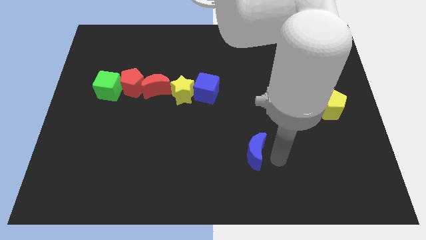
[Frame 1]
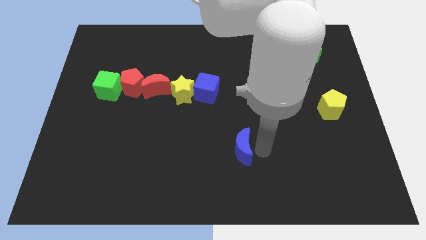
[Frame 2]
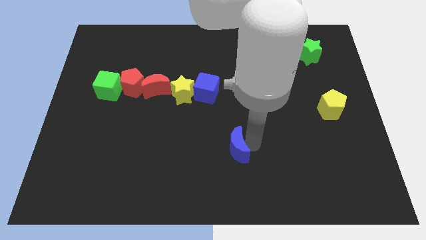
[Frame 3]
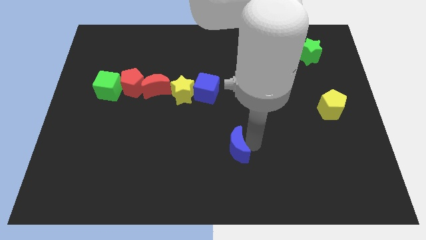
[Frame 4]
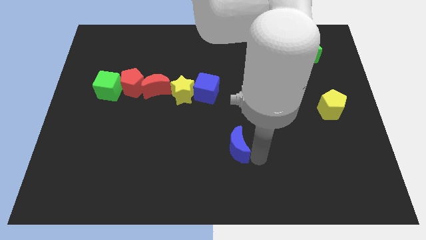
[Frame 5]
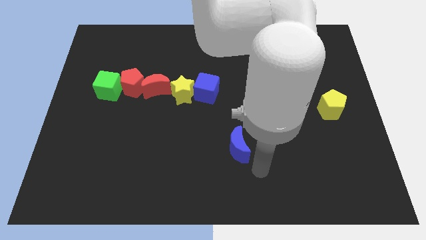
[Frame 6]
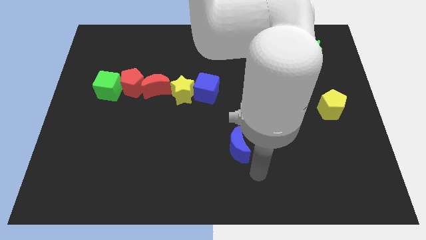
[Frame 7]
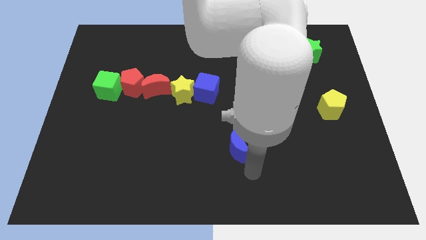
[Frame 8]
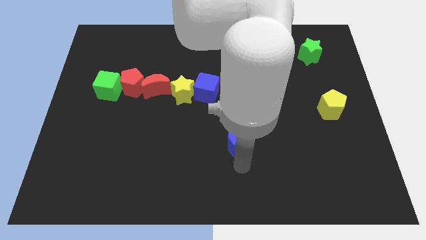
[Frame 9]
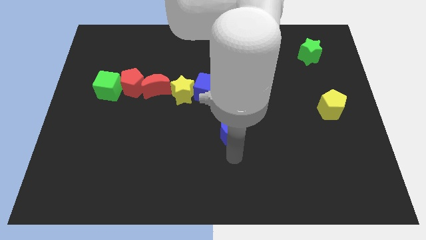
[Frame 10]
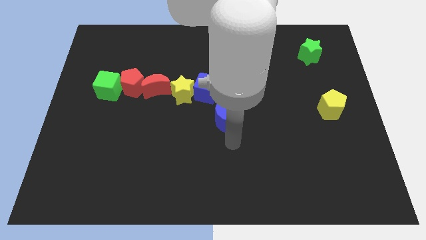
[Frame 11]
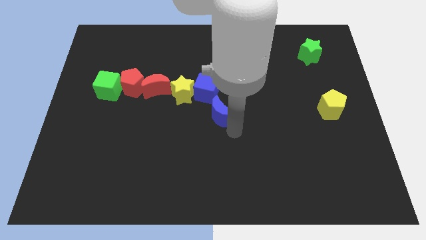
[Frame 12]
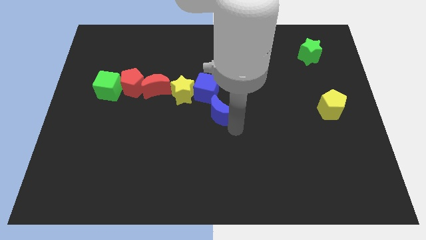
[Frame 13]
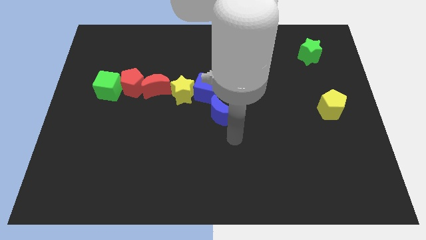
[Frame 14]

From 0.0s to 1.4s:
place the blue moon bottom right to the blue cube

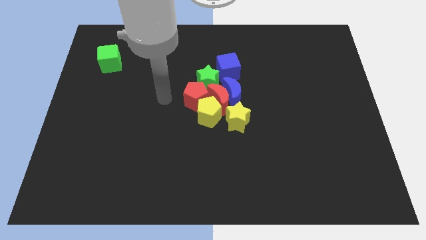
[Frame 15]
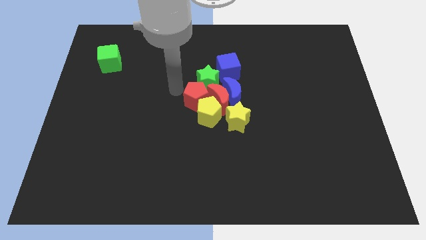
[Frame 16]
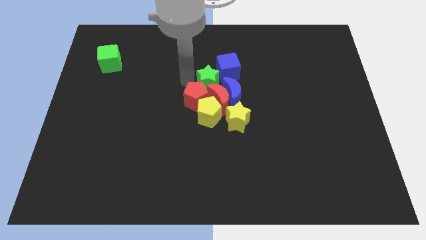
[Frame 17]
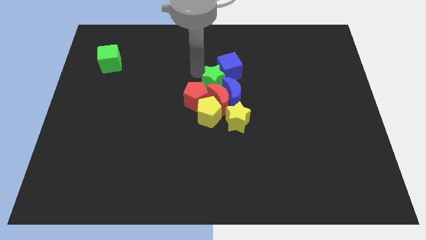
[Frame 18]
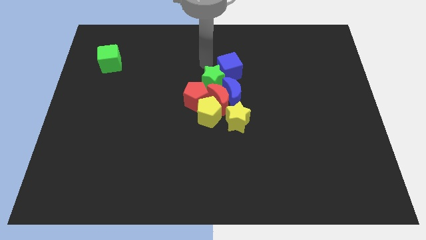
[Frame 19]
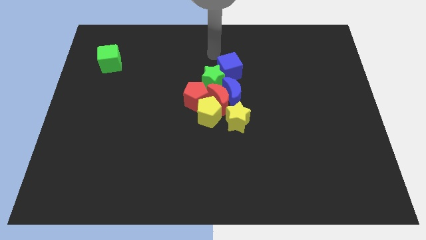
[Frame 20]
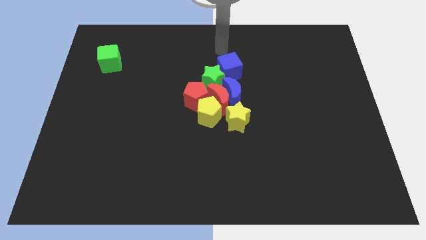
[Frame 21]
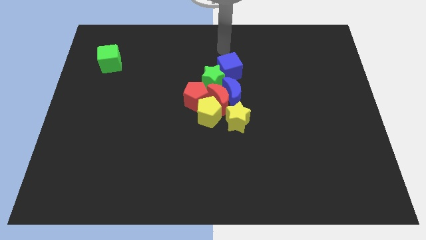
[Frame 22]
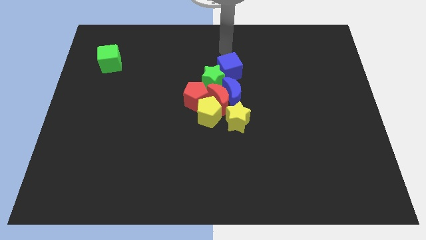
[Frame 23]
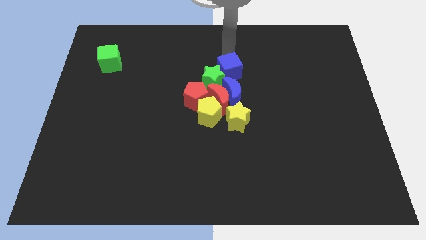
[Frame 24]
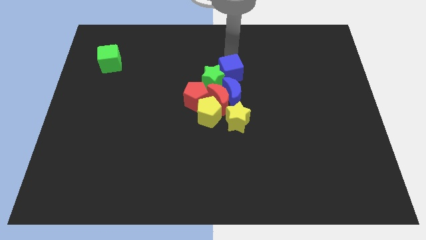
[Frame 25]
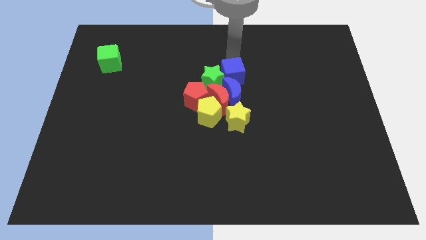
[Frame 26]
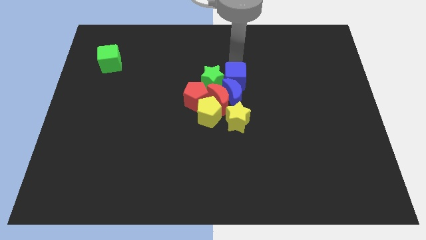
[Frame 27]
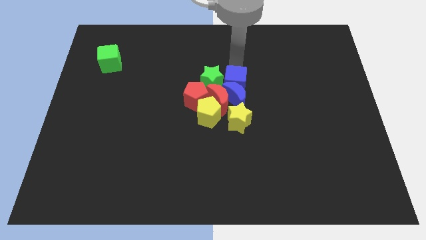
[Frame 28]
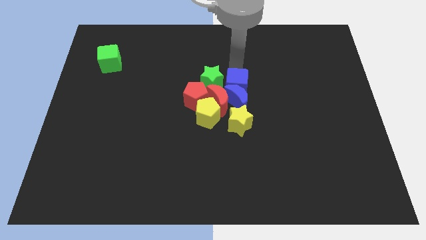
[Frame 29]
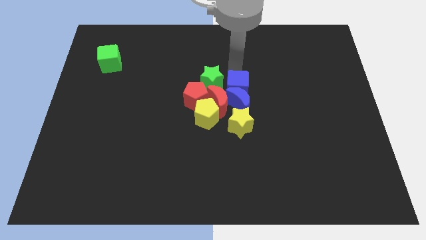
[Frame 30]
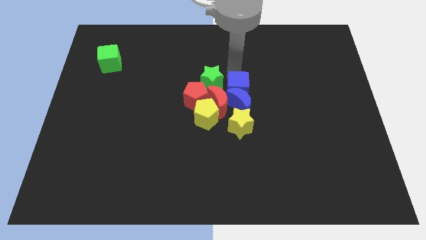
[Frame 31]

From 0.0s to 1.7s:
move the blue cube to the top of the blue crescent

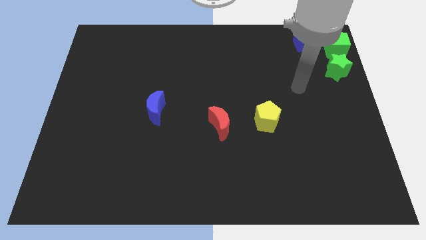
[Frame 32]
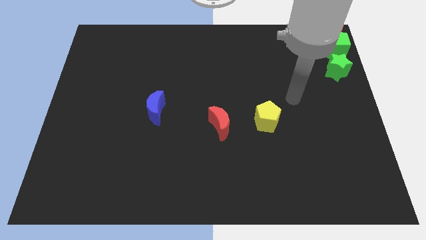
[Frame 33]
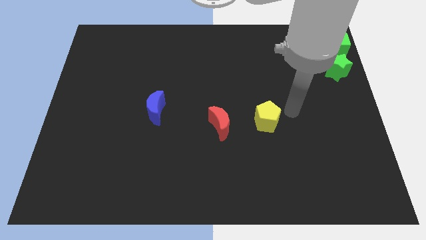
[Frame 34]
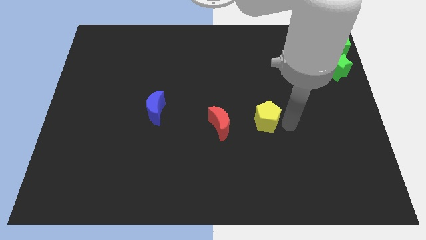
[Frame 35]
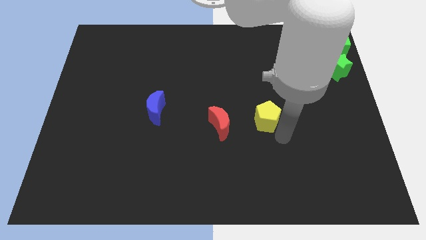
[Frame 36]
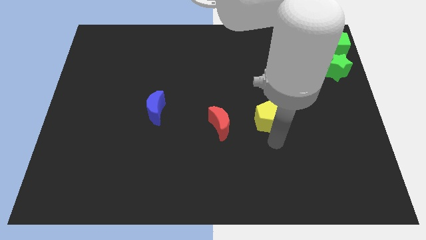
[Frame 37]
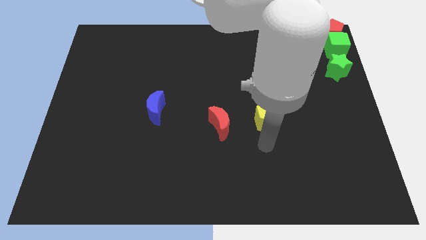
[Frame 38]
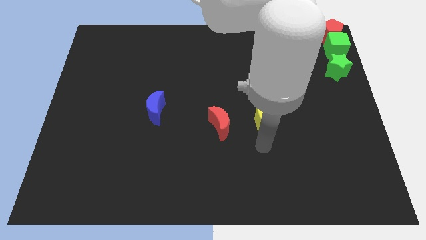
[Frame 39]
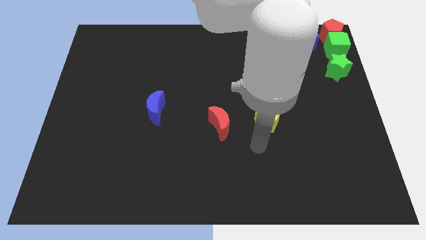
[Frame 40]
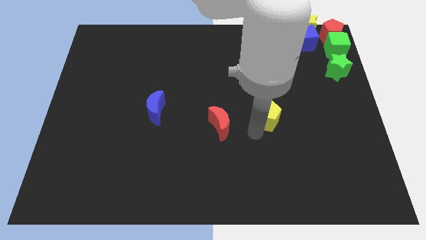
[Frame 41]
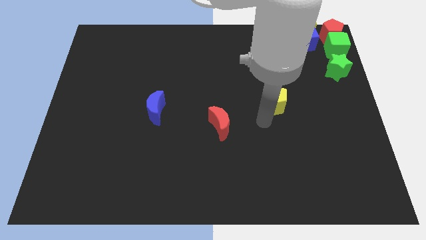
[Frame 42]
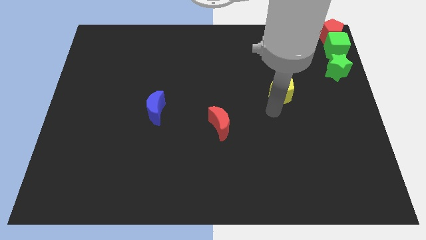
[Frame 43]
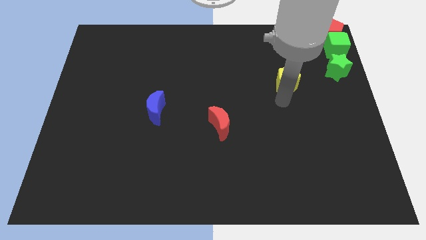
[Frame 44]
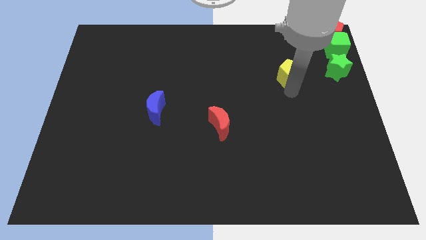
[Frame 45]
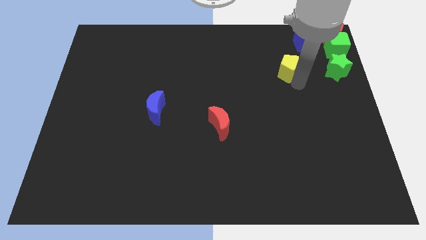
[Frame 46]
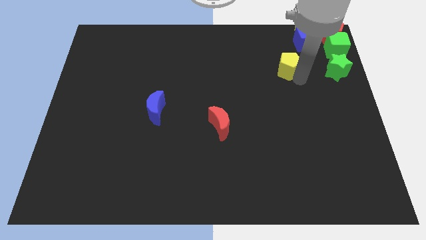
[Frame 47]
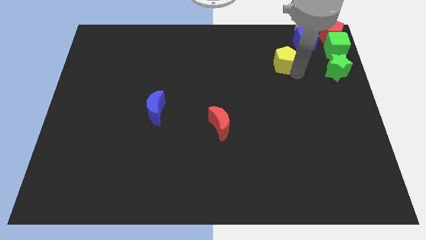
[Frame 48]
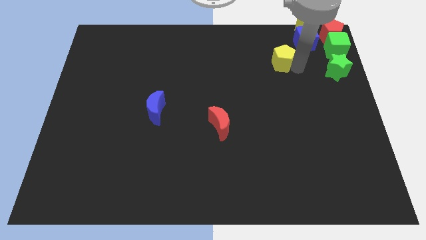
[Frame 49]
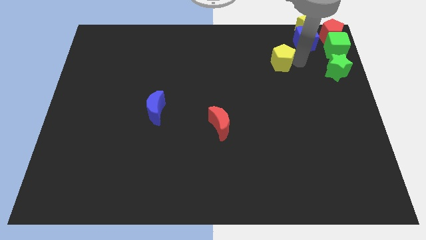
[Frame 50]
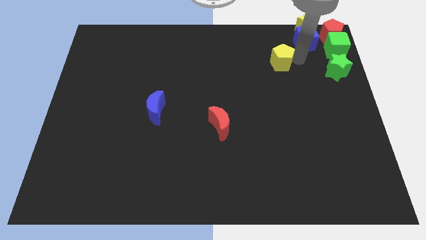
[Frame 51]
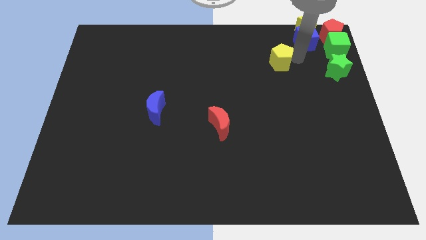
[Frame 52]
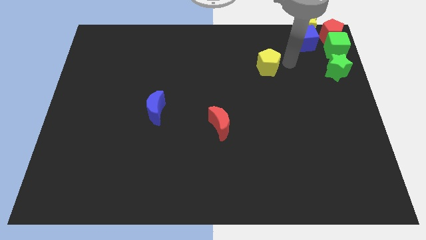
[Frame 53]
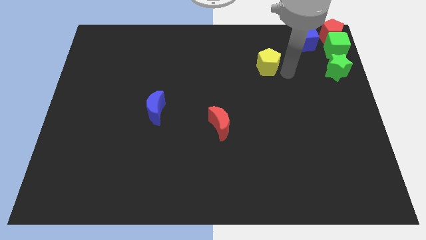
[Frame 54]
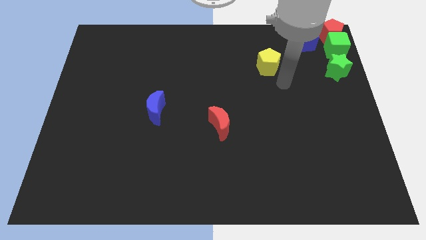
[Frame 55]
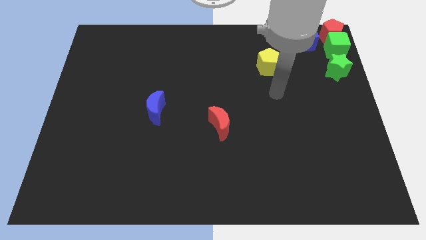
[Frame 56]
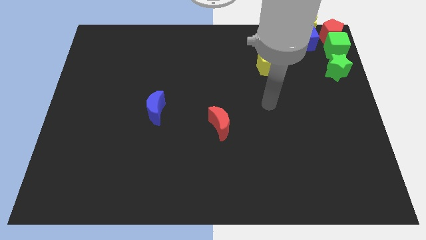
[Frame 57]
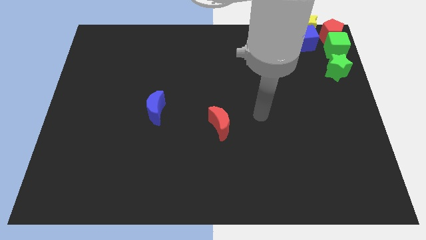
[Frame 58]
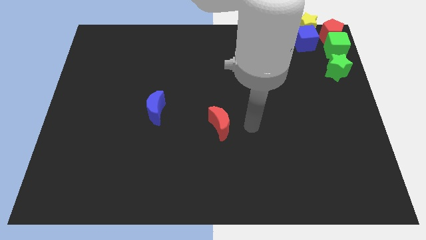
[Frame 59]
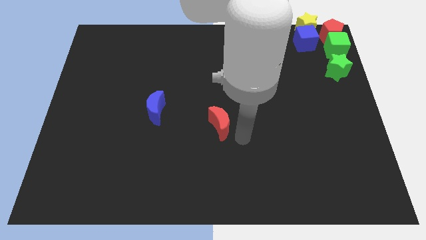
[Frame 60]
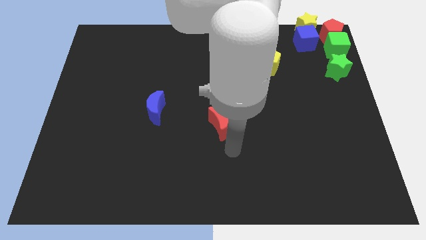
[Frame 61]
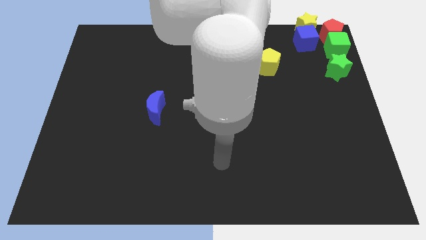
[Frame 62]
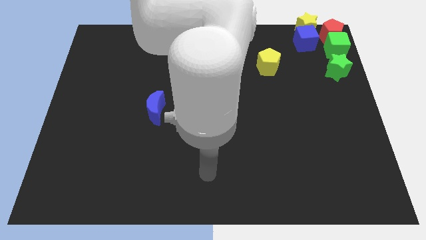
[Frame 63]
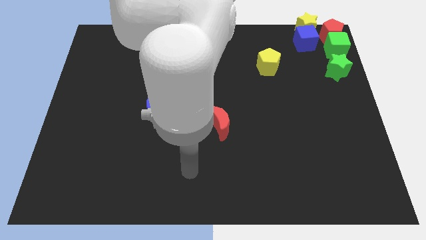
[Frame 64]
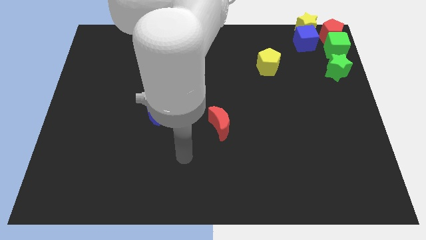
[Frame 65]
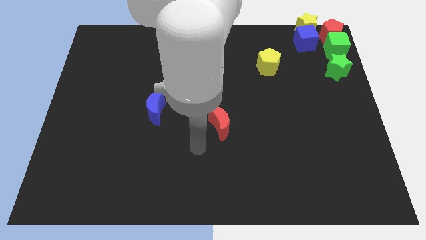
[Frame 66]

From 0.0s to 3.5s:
place the yellow pentagon diagonally close to blue cube

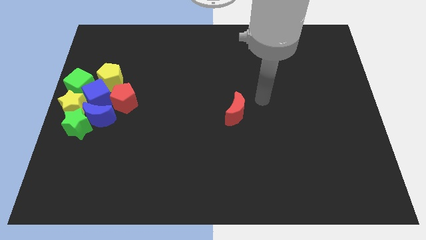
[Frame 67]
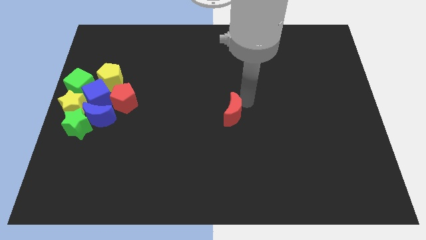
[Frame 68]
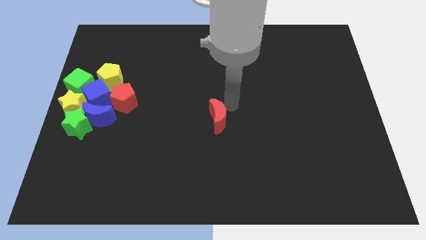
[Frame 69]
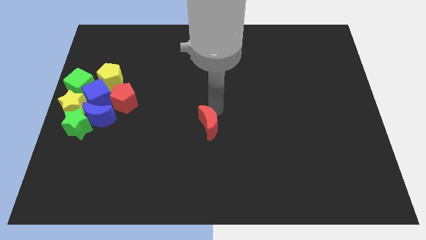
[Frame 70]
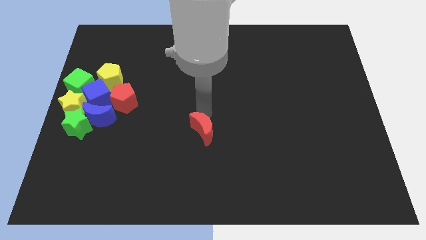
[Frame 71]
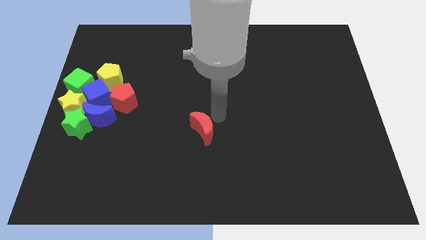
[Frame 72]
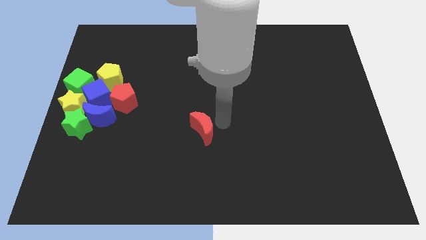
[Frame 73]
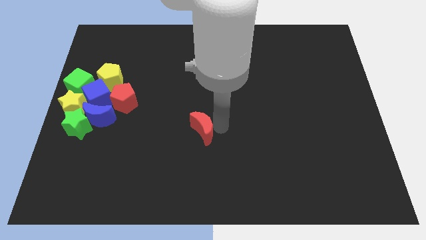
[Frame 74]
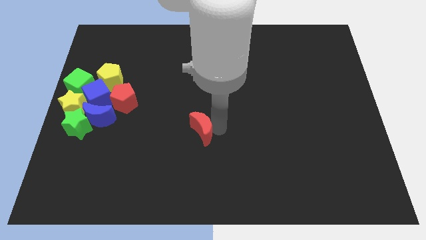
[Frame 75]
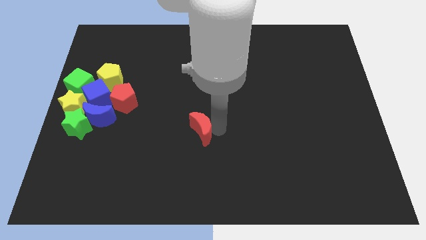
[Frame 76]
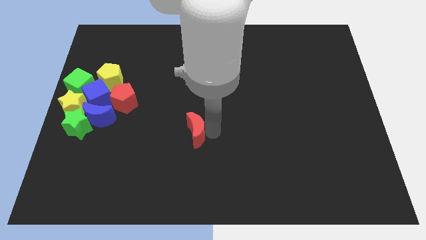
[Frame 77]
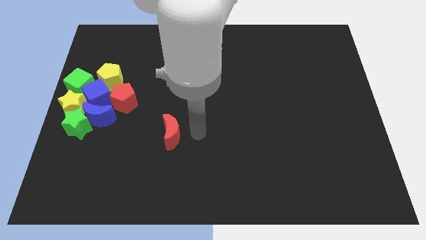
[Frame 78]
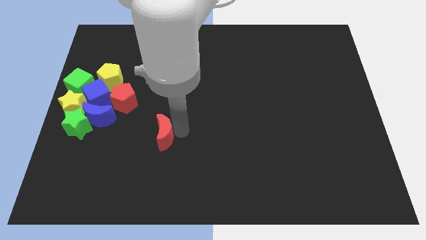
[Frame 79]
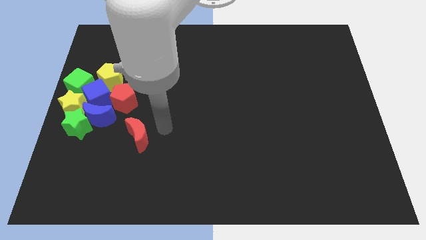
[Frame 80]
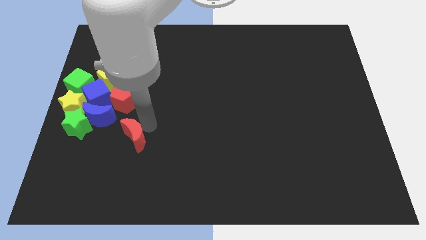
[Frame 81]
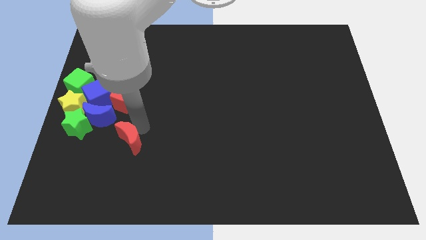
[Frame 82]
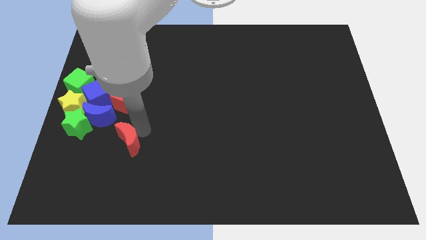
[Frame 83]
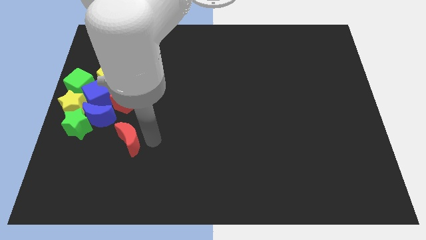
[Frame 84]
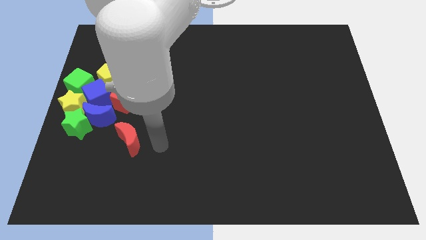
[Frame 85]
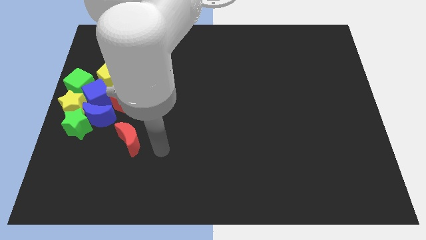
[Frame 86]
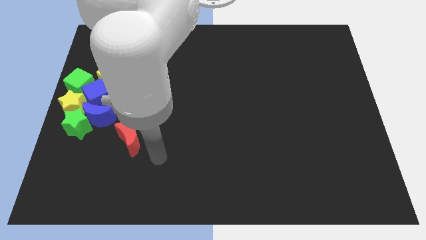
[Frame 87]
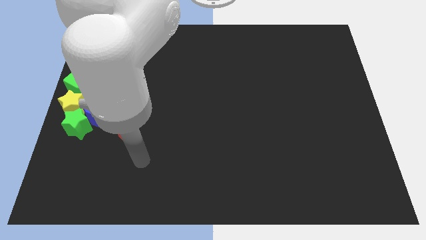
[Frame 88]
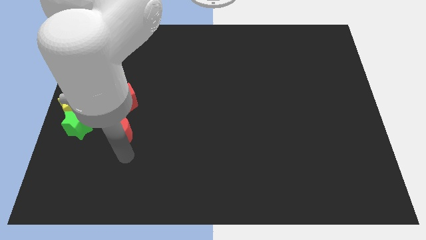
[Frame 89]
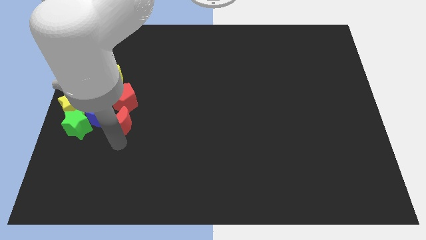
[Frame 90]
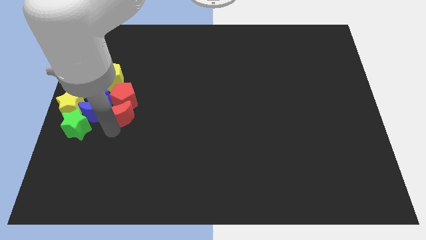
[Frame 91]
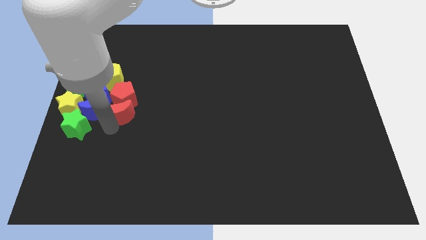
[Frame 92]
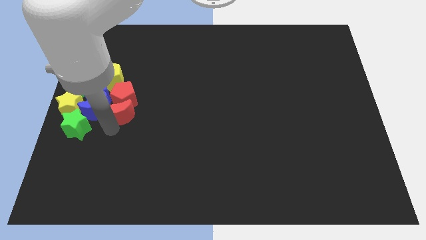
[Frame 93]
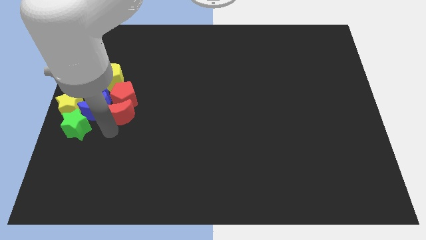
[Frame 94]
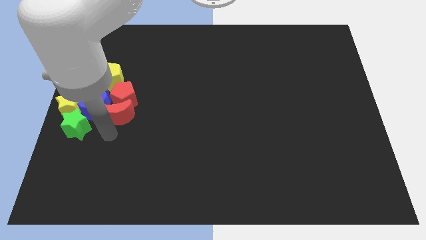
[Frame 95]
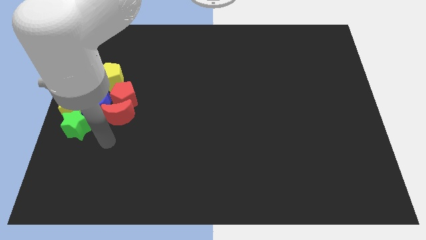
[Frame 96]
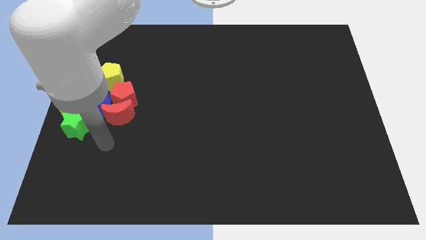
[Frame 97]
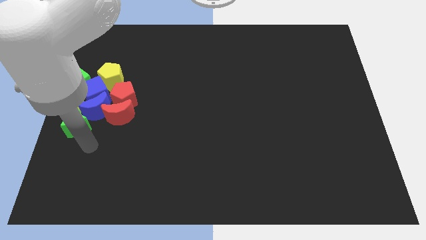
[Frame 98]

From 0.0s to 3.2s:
move the red crescent to the bottom of the red pentagon
